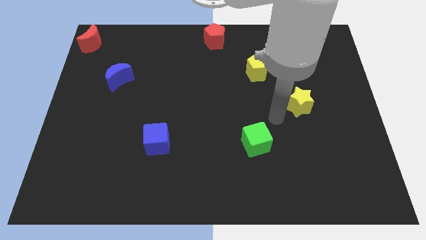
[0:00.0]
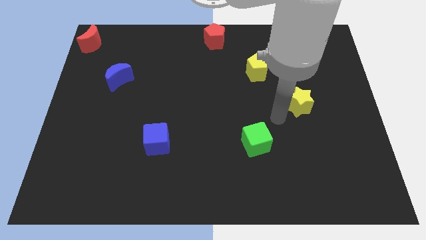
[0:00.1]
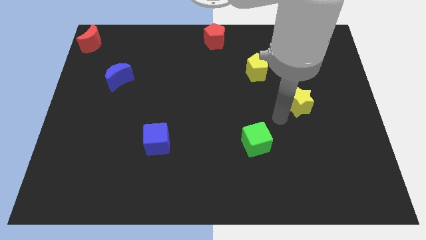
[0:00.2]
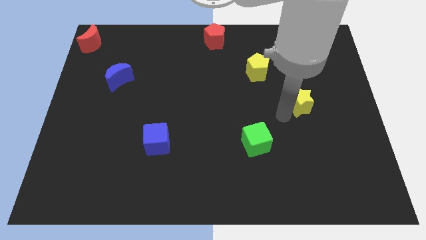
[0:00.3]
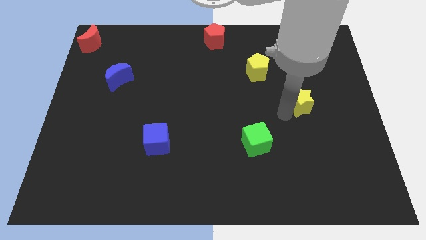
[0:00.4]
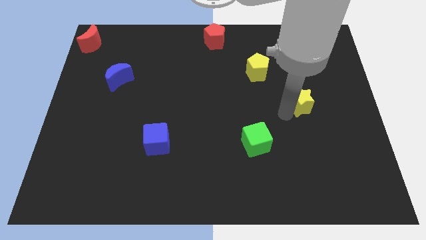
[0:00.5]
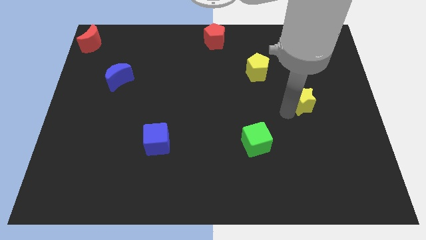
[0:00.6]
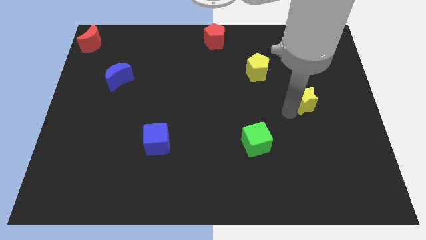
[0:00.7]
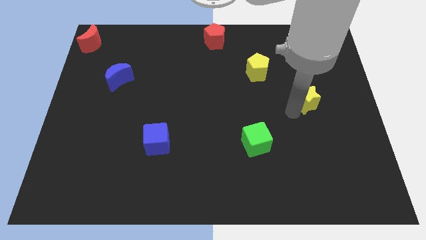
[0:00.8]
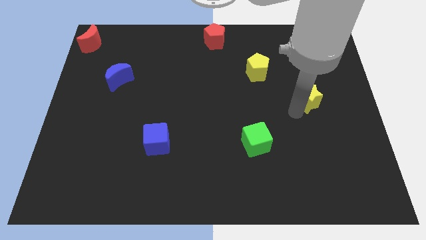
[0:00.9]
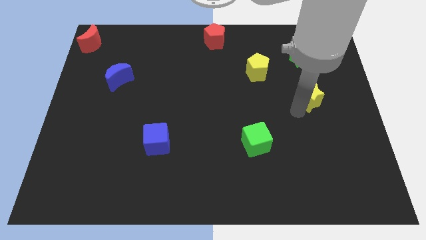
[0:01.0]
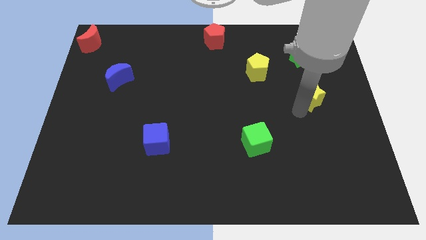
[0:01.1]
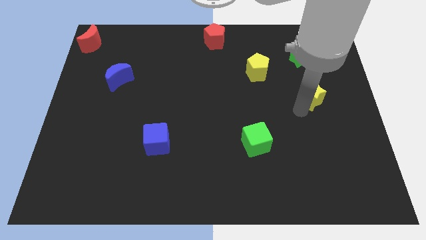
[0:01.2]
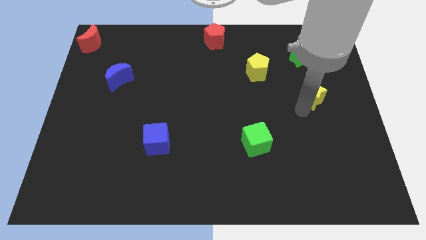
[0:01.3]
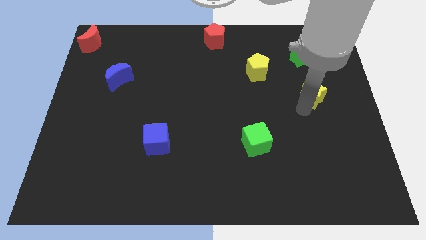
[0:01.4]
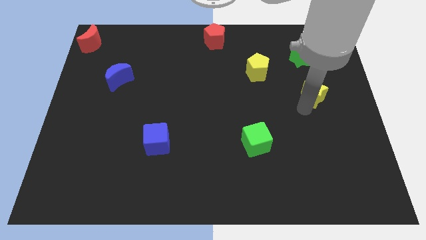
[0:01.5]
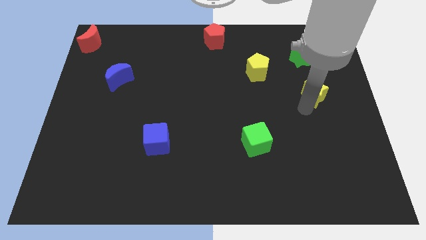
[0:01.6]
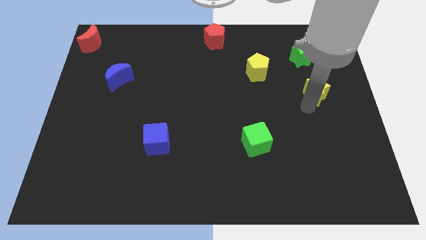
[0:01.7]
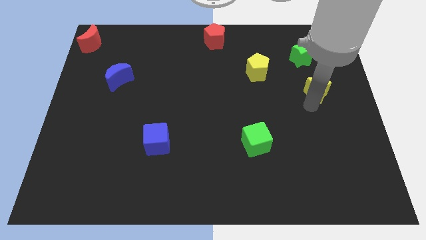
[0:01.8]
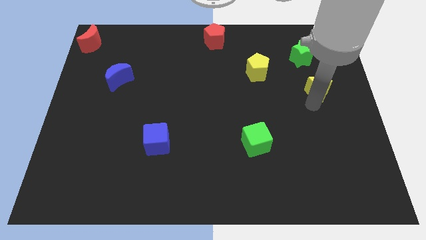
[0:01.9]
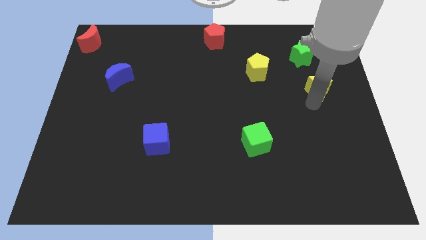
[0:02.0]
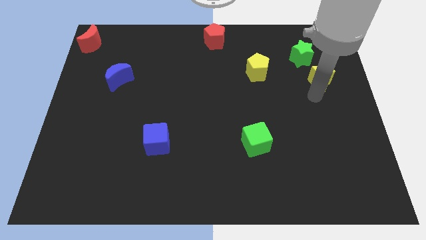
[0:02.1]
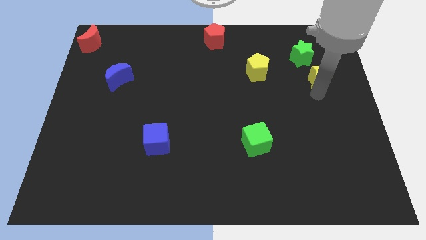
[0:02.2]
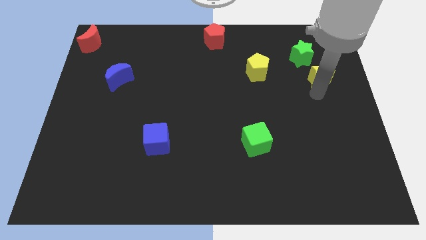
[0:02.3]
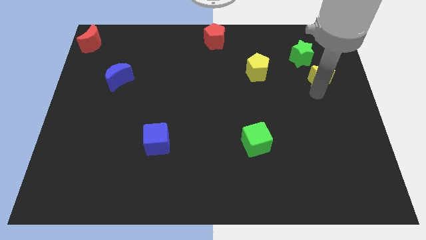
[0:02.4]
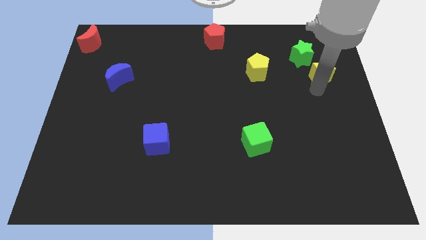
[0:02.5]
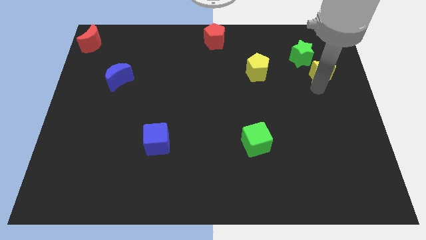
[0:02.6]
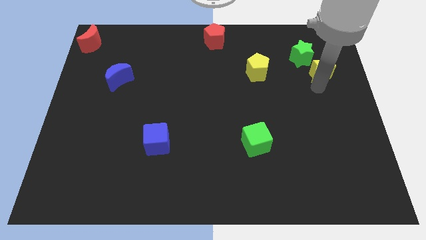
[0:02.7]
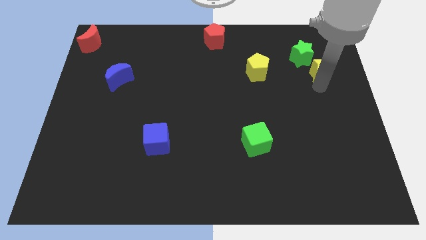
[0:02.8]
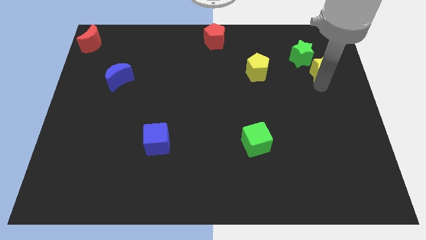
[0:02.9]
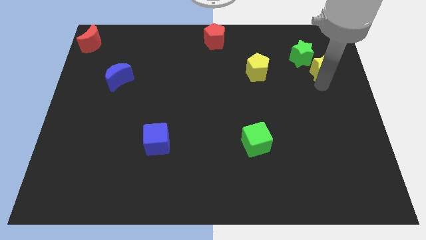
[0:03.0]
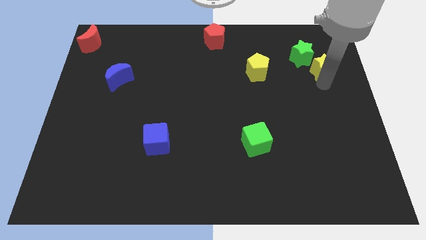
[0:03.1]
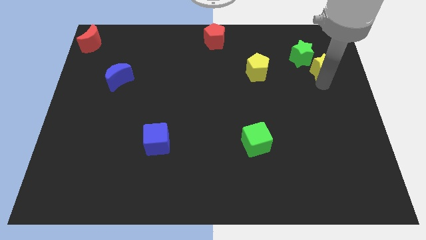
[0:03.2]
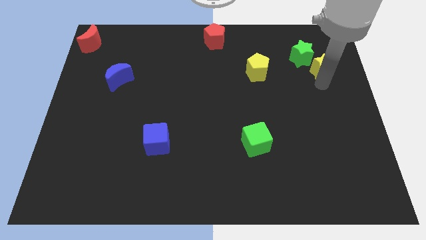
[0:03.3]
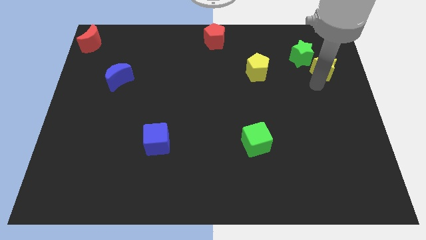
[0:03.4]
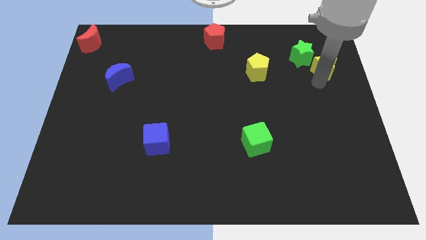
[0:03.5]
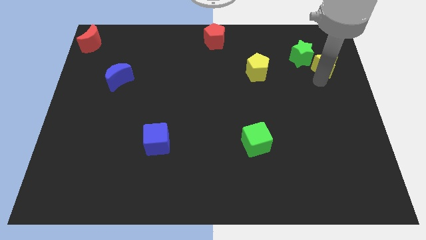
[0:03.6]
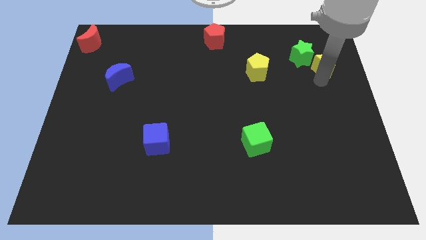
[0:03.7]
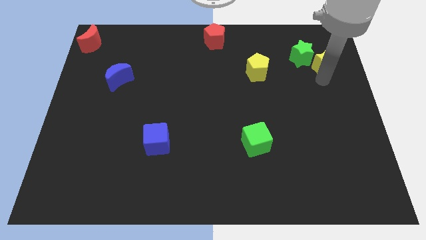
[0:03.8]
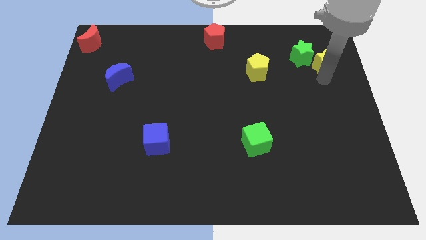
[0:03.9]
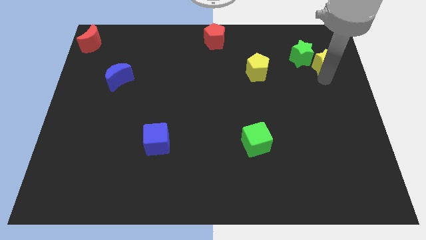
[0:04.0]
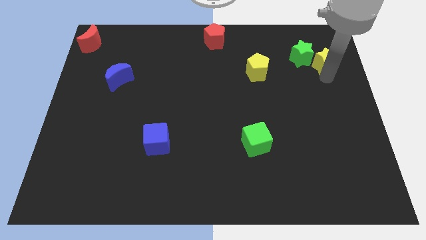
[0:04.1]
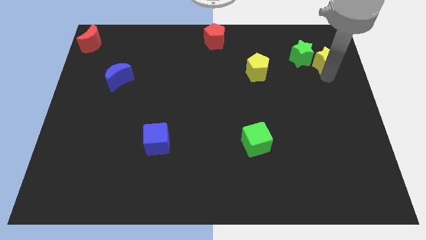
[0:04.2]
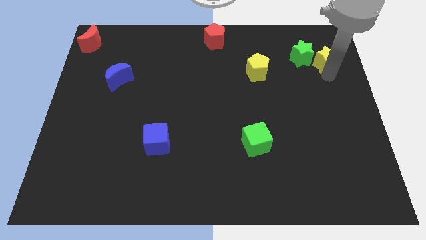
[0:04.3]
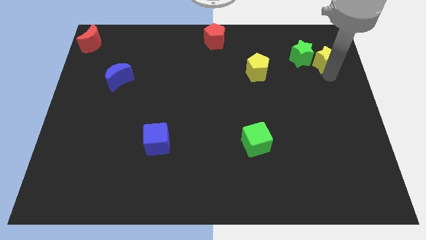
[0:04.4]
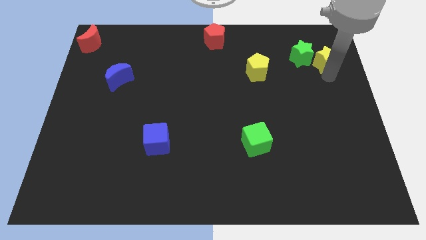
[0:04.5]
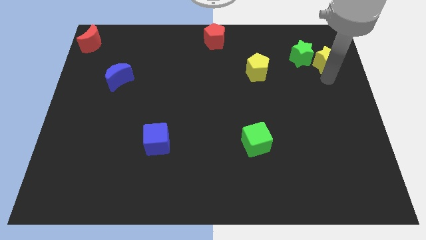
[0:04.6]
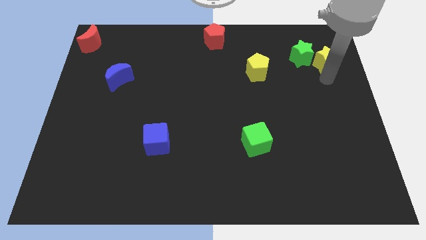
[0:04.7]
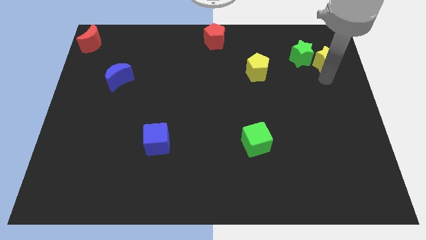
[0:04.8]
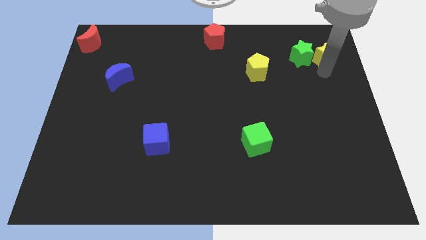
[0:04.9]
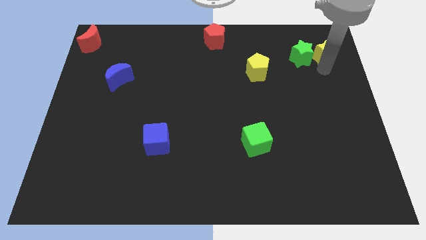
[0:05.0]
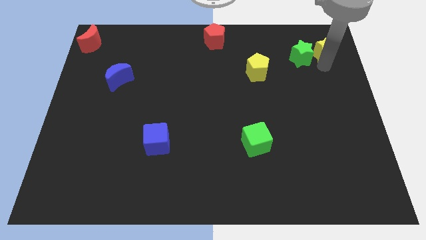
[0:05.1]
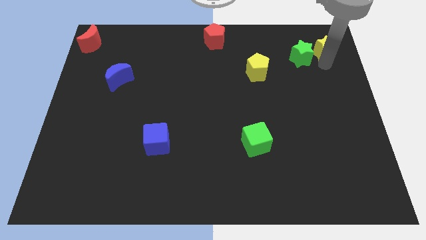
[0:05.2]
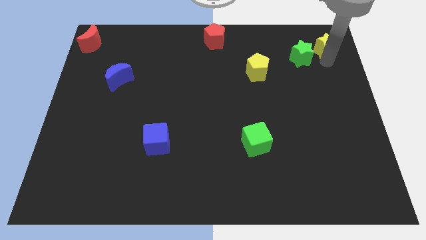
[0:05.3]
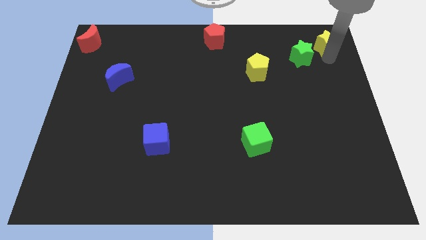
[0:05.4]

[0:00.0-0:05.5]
move the yellow star to the top right corner of the board

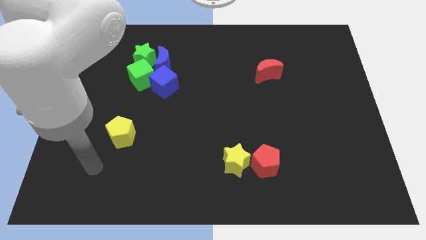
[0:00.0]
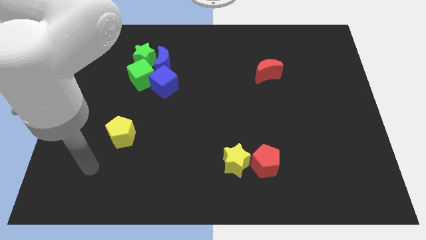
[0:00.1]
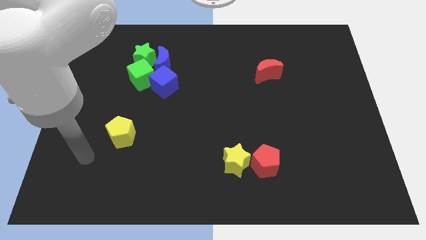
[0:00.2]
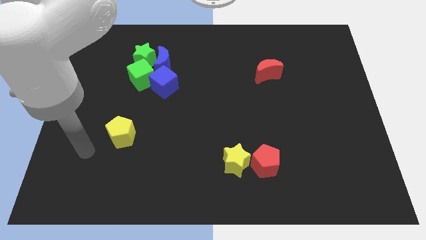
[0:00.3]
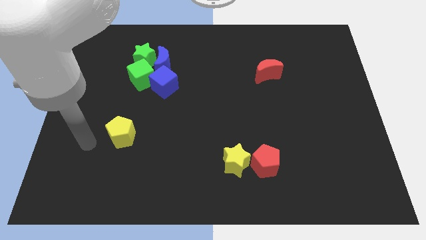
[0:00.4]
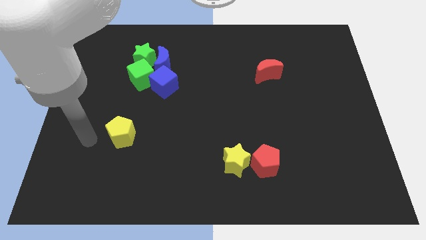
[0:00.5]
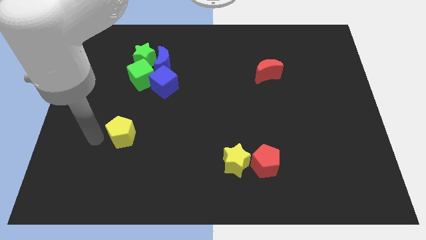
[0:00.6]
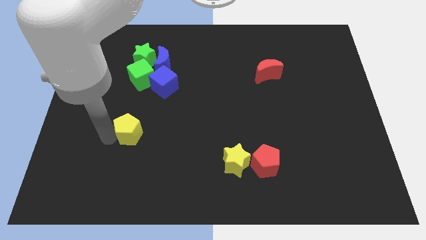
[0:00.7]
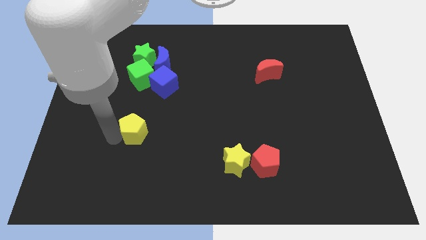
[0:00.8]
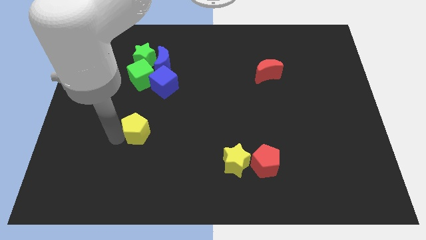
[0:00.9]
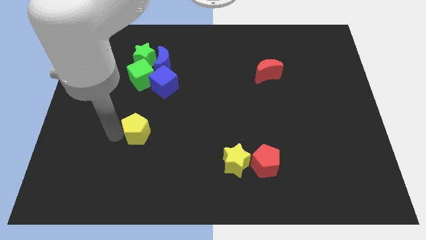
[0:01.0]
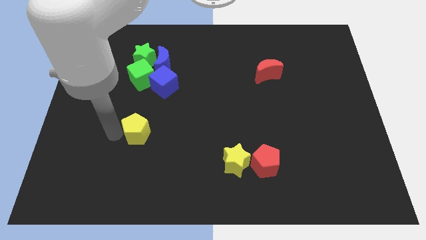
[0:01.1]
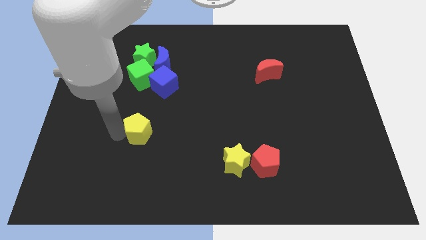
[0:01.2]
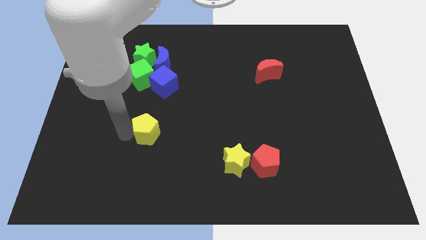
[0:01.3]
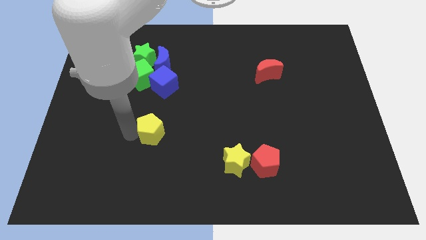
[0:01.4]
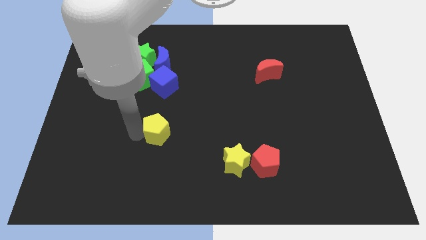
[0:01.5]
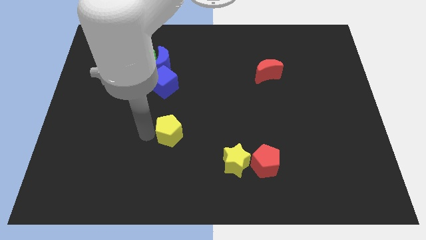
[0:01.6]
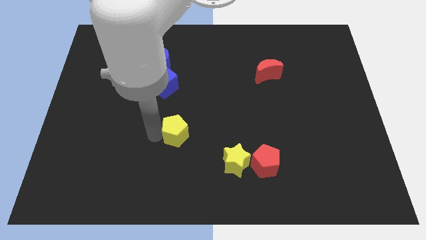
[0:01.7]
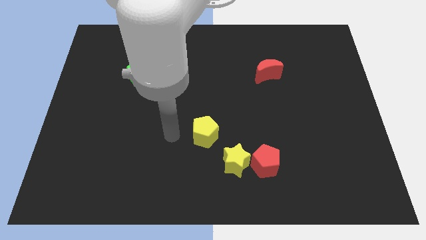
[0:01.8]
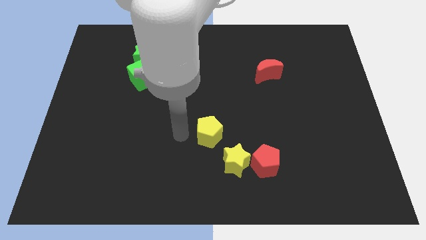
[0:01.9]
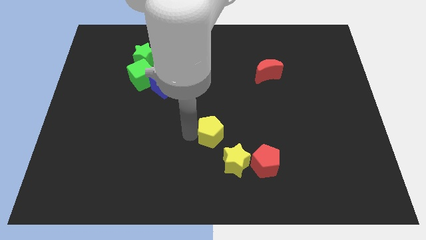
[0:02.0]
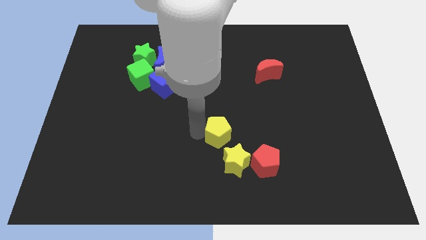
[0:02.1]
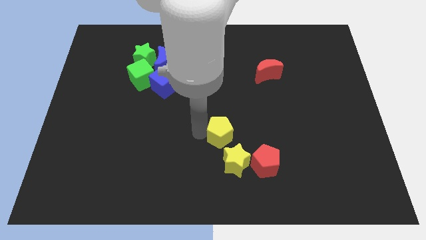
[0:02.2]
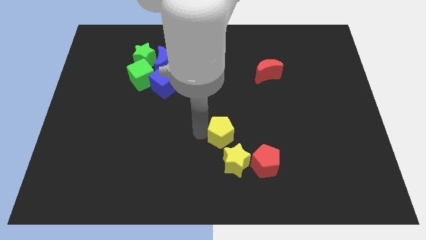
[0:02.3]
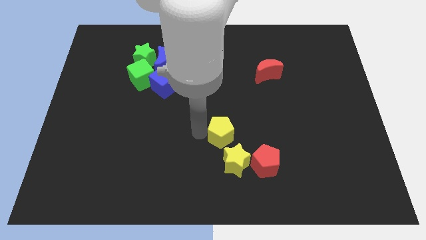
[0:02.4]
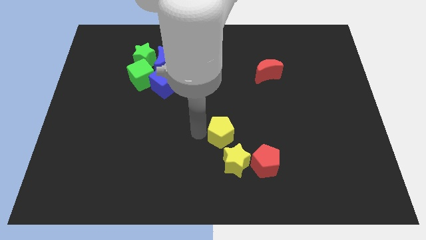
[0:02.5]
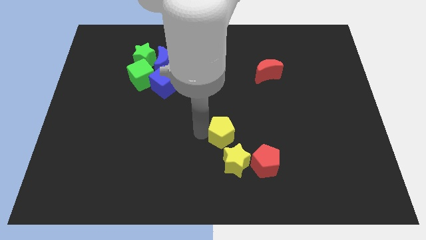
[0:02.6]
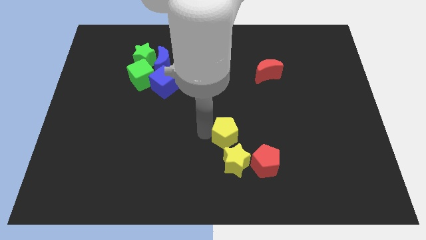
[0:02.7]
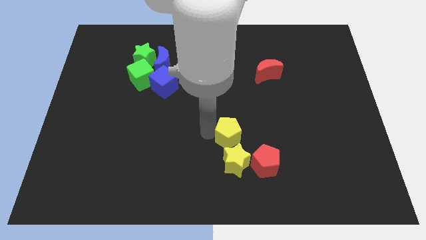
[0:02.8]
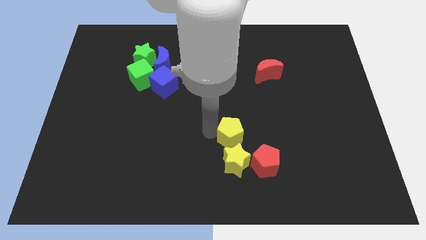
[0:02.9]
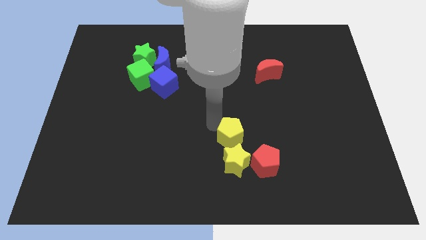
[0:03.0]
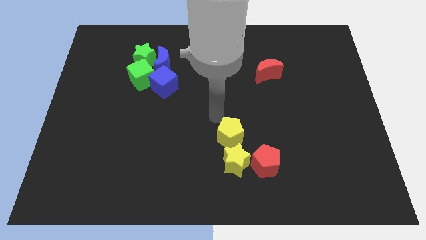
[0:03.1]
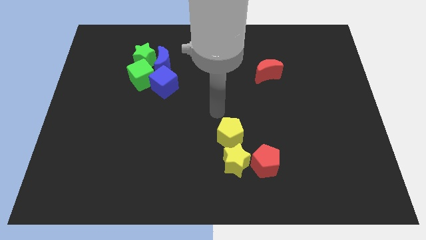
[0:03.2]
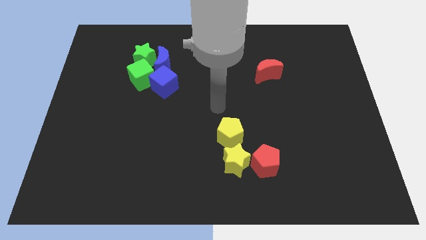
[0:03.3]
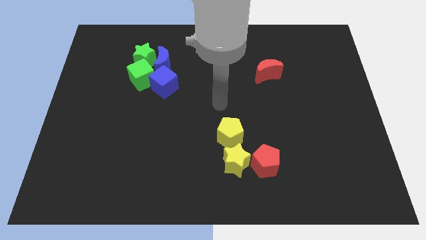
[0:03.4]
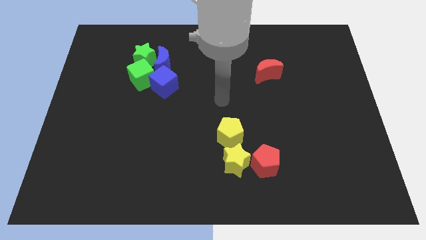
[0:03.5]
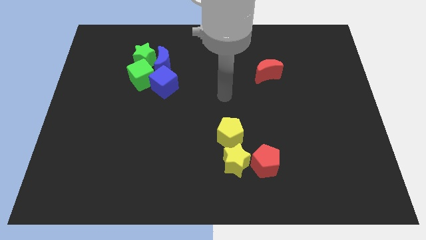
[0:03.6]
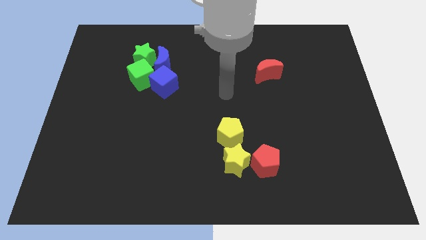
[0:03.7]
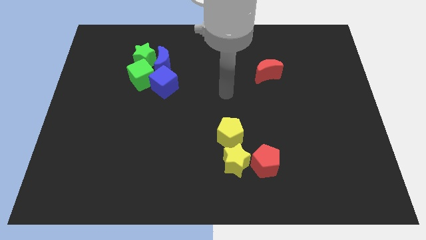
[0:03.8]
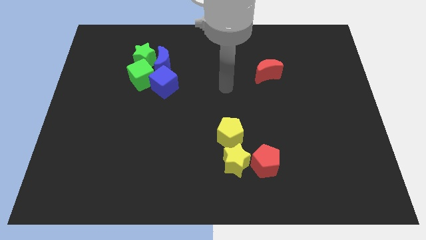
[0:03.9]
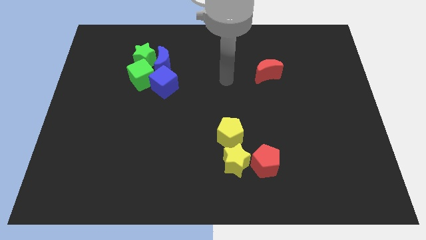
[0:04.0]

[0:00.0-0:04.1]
place yellow pentagon above the yellow star
